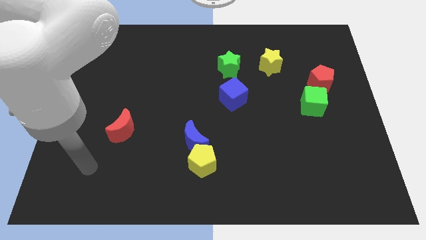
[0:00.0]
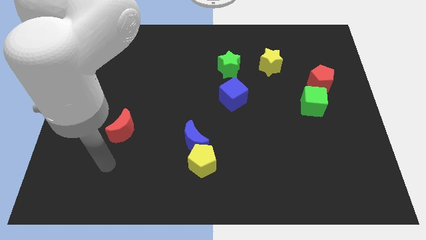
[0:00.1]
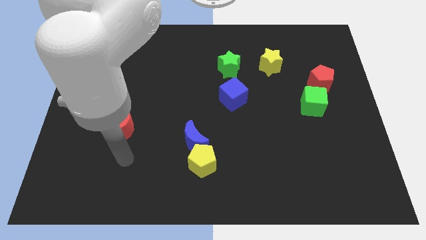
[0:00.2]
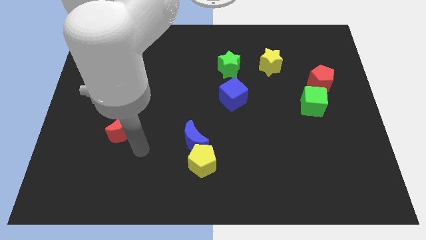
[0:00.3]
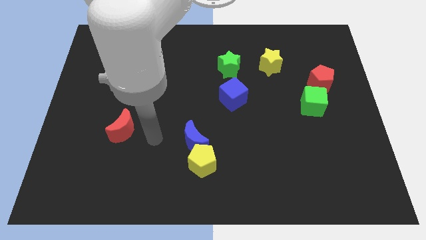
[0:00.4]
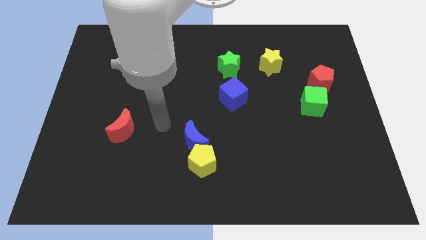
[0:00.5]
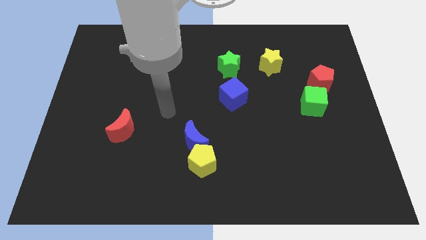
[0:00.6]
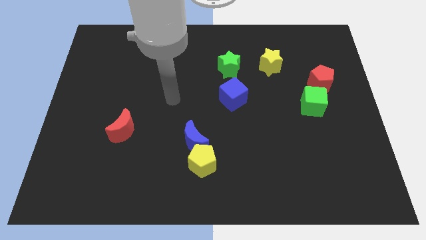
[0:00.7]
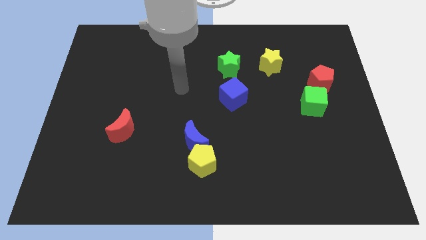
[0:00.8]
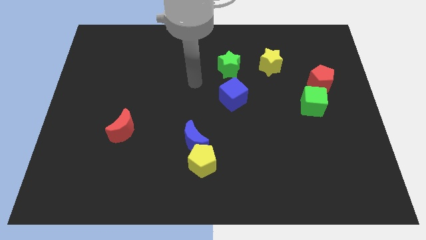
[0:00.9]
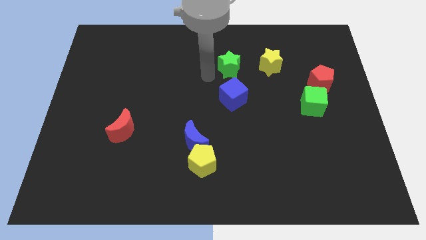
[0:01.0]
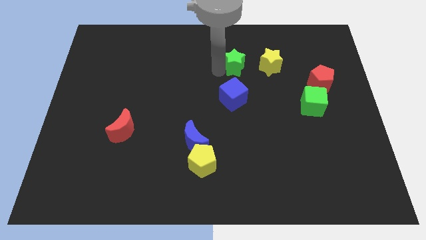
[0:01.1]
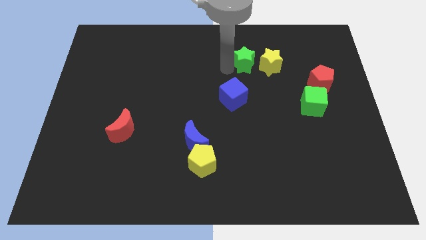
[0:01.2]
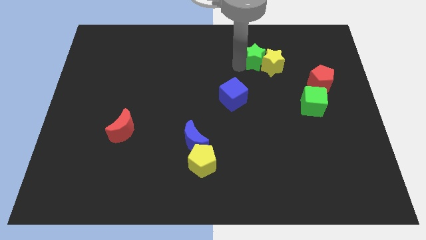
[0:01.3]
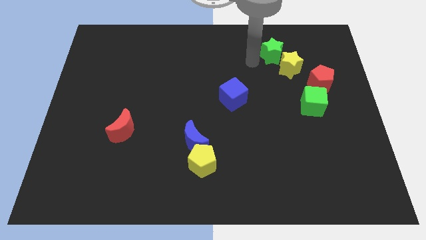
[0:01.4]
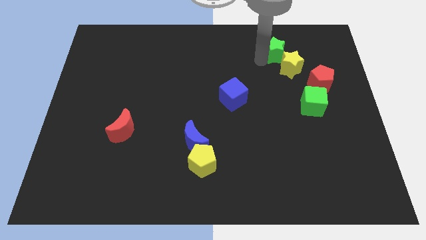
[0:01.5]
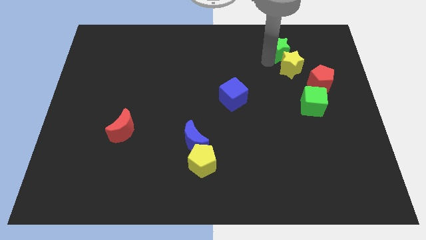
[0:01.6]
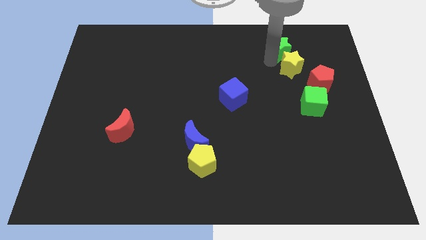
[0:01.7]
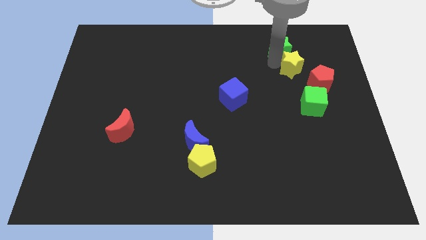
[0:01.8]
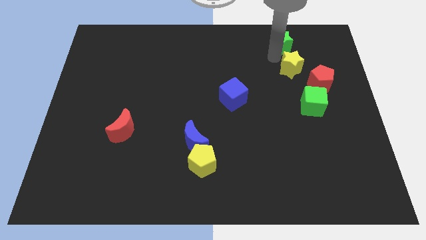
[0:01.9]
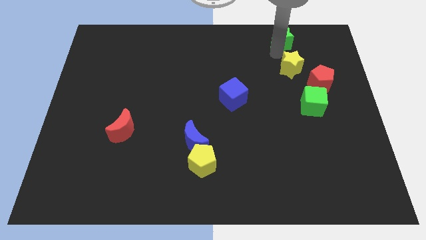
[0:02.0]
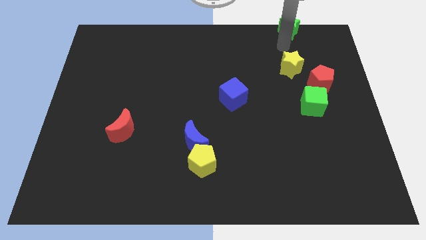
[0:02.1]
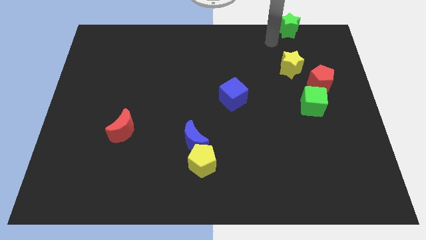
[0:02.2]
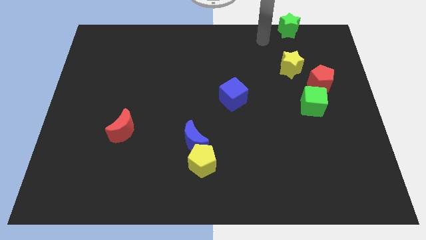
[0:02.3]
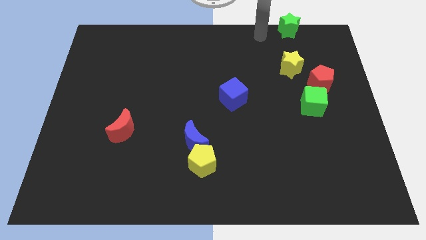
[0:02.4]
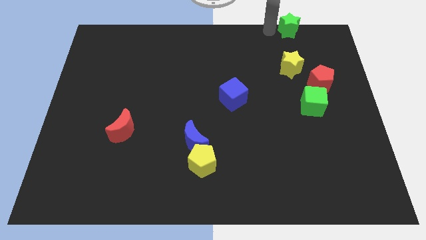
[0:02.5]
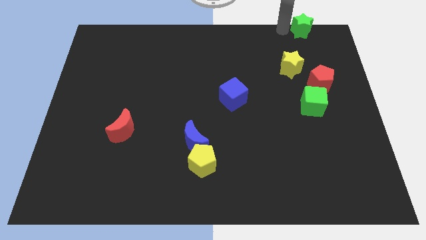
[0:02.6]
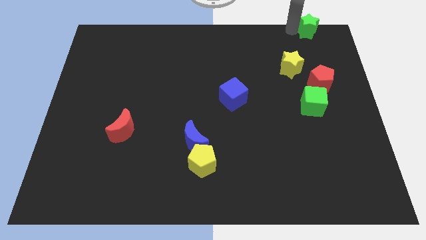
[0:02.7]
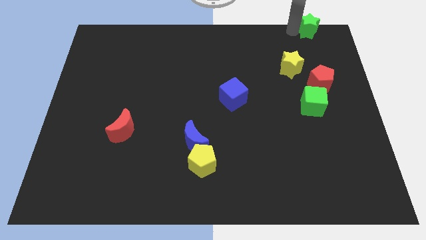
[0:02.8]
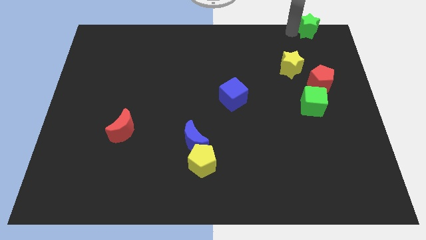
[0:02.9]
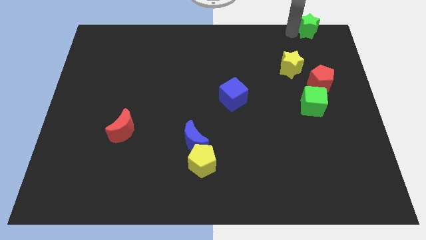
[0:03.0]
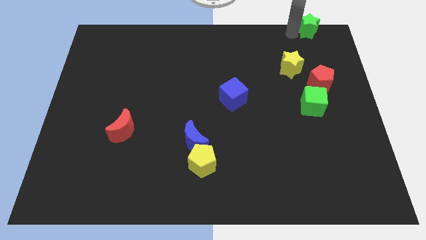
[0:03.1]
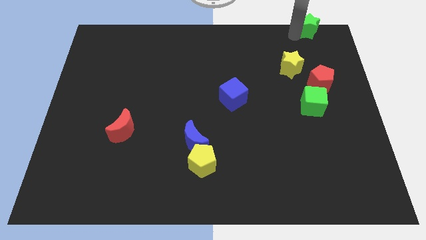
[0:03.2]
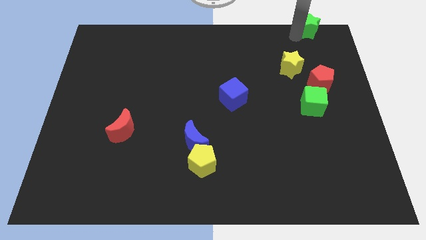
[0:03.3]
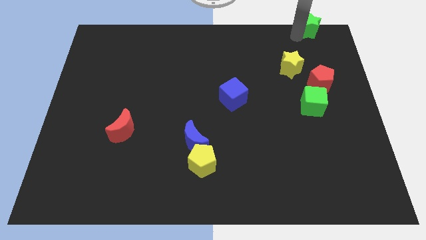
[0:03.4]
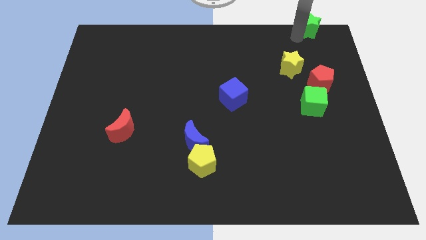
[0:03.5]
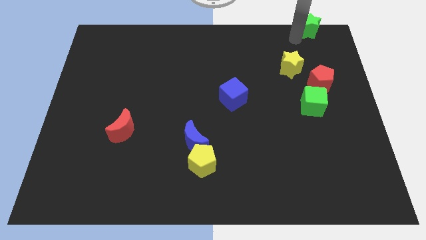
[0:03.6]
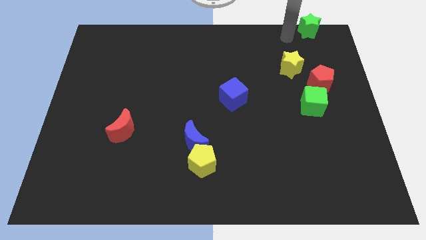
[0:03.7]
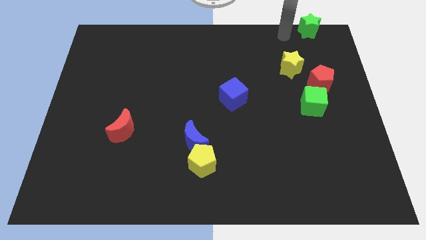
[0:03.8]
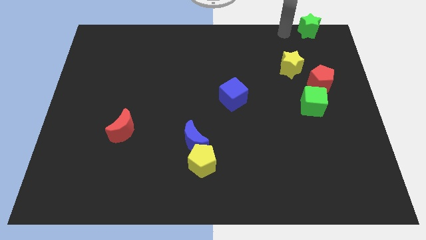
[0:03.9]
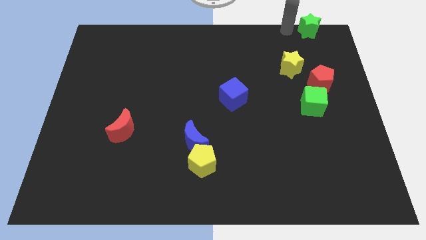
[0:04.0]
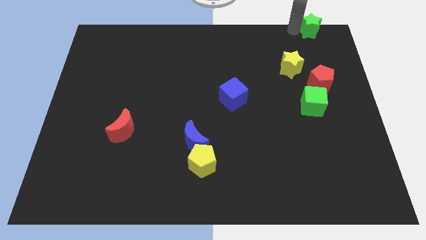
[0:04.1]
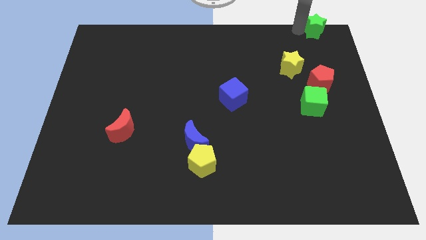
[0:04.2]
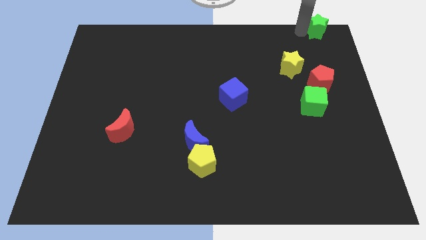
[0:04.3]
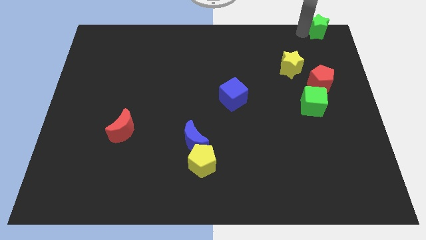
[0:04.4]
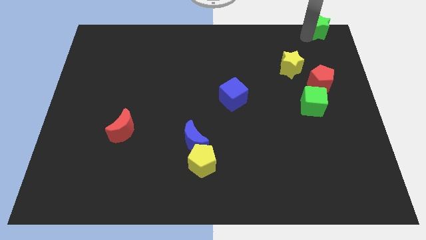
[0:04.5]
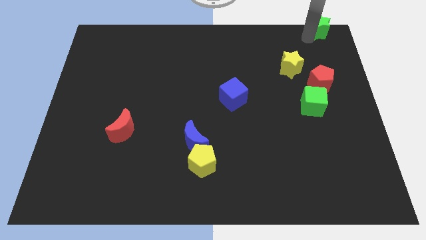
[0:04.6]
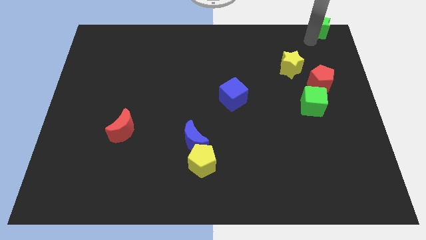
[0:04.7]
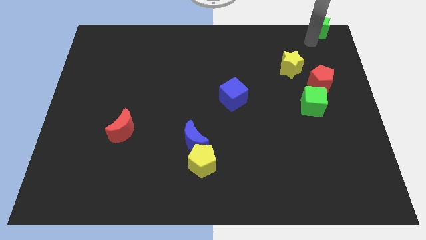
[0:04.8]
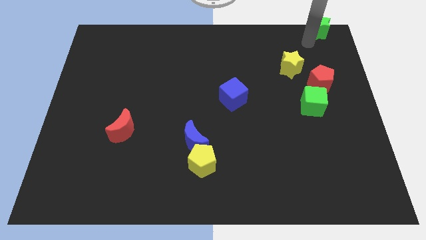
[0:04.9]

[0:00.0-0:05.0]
push the green star towards the top right side of the board

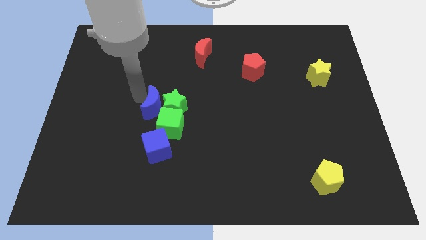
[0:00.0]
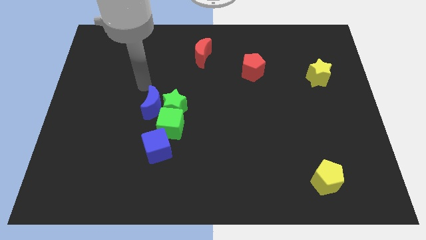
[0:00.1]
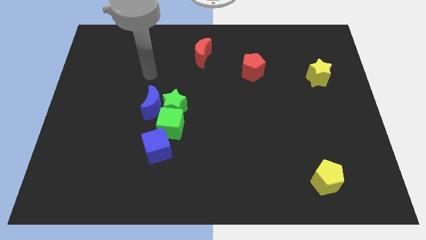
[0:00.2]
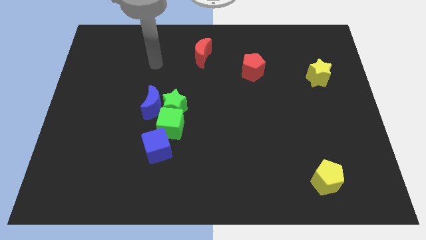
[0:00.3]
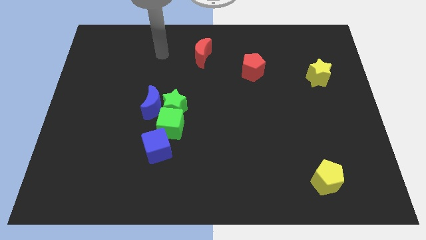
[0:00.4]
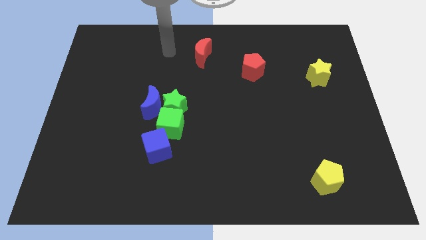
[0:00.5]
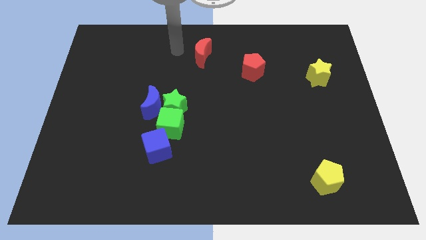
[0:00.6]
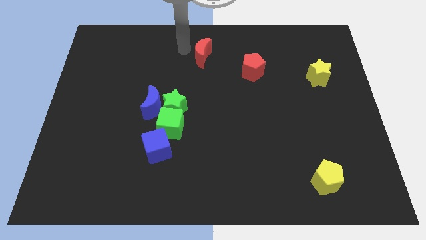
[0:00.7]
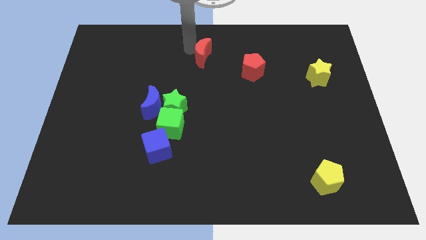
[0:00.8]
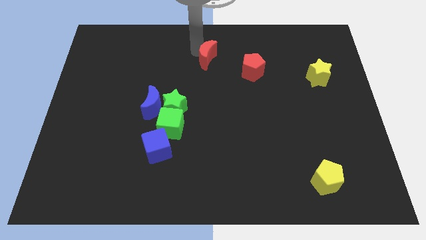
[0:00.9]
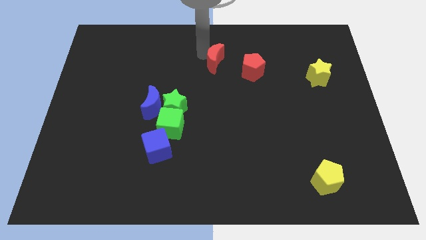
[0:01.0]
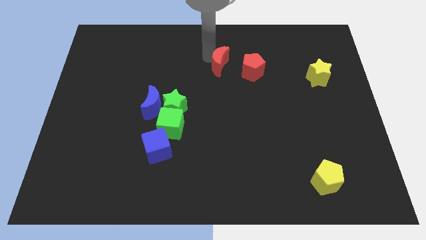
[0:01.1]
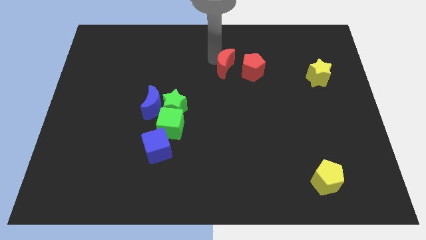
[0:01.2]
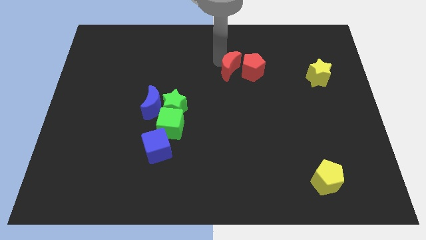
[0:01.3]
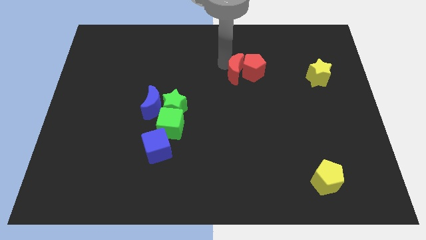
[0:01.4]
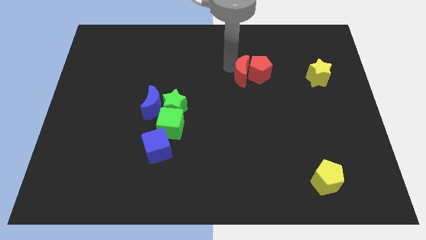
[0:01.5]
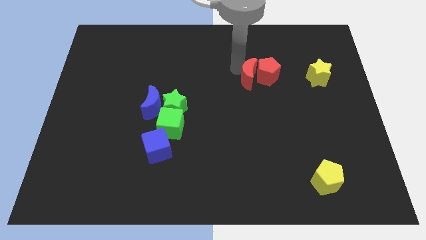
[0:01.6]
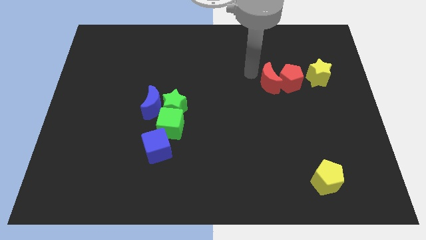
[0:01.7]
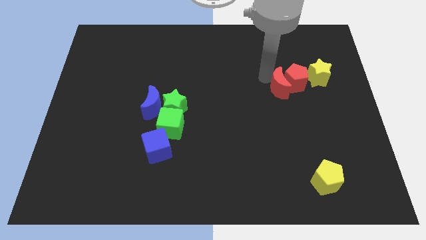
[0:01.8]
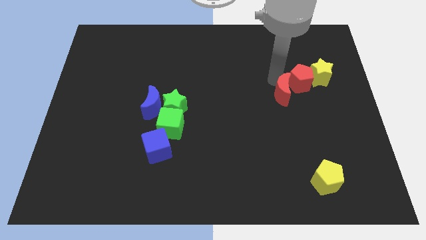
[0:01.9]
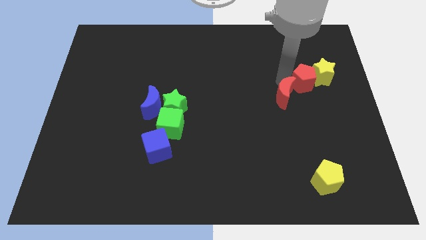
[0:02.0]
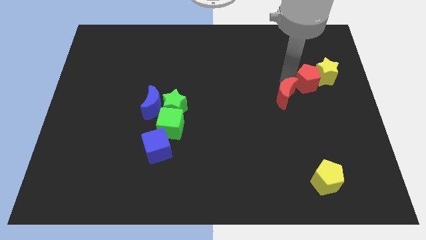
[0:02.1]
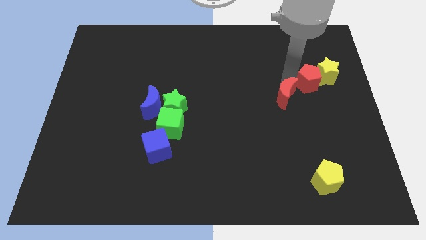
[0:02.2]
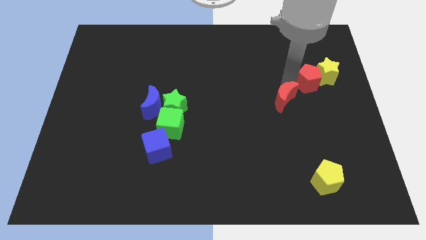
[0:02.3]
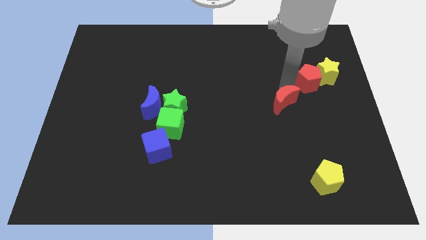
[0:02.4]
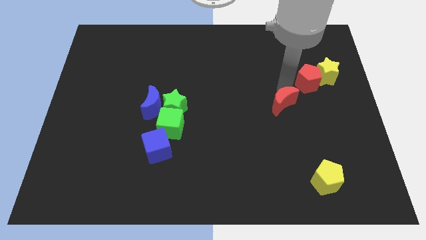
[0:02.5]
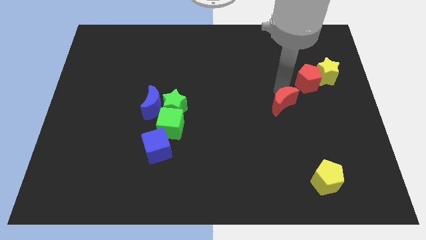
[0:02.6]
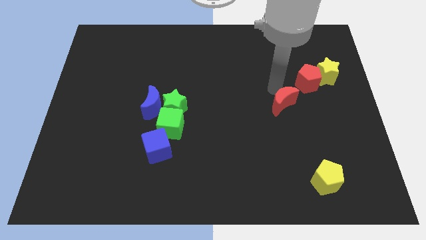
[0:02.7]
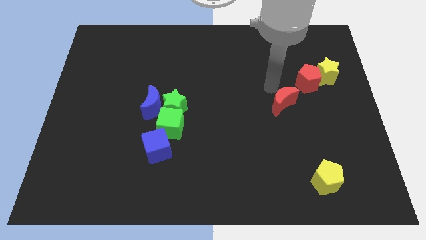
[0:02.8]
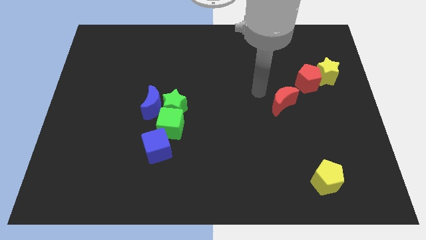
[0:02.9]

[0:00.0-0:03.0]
push the red blocks and yellow star towards the right side of the board

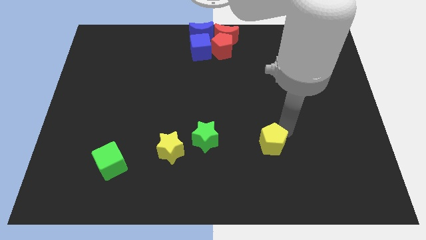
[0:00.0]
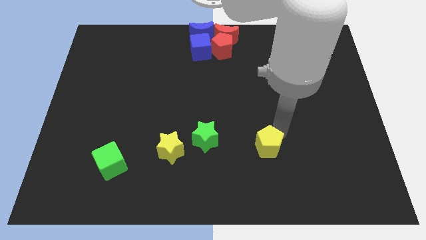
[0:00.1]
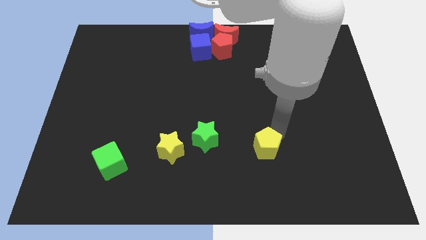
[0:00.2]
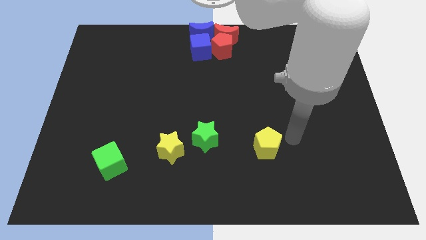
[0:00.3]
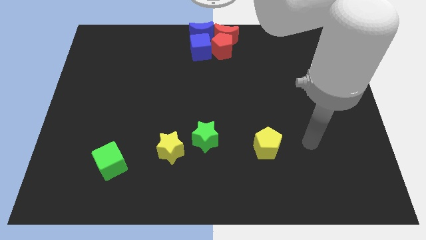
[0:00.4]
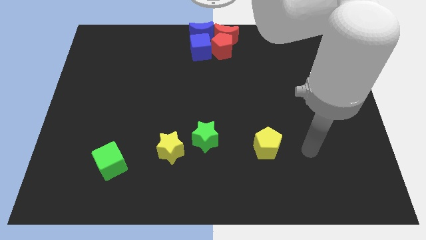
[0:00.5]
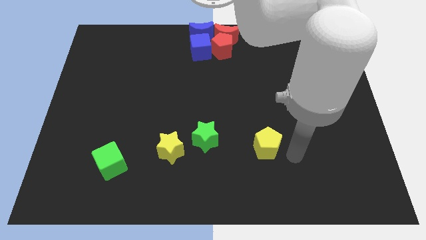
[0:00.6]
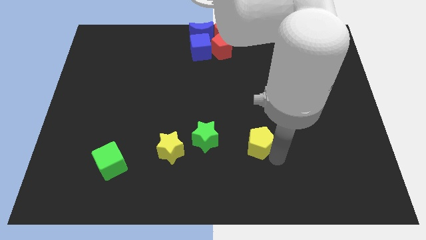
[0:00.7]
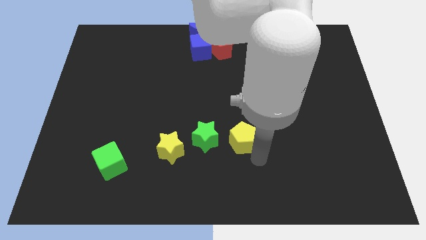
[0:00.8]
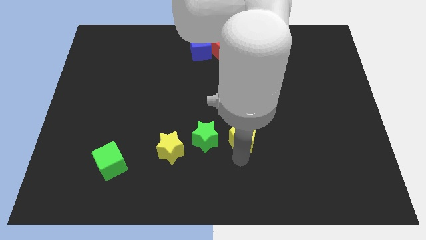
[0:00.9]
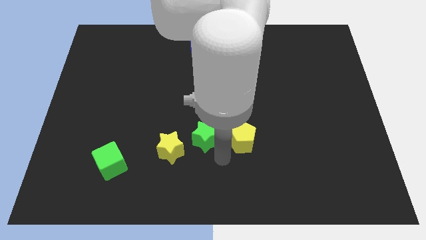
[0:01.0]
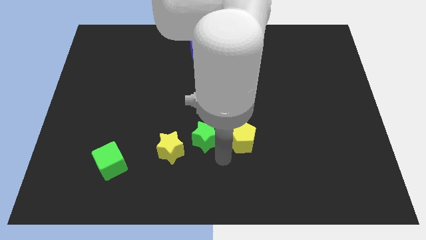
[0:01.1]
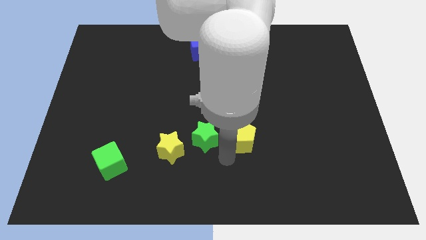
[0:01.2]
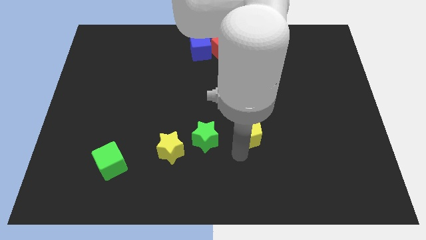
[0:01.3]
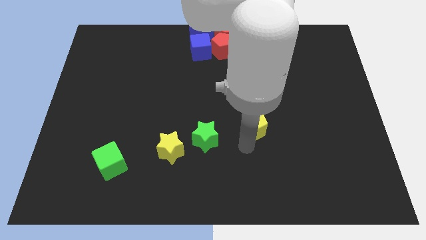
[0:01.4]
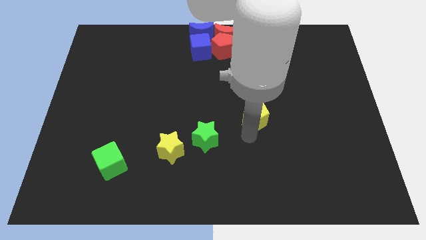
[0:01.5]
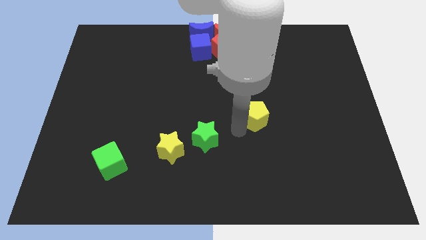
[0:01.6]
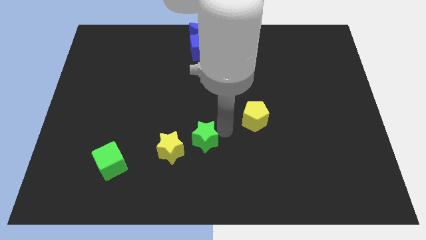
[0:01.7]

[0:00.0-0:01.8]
push the yellow pentagon to the top right of the green star
